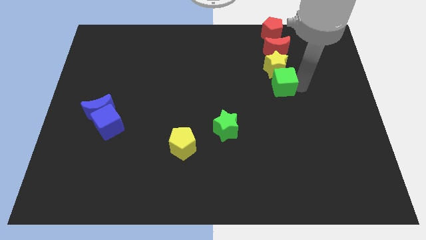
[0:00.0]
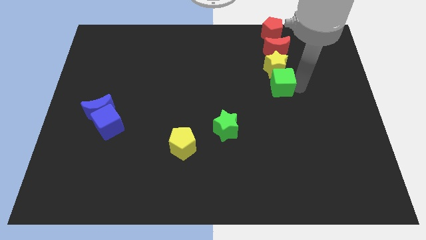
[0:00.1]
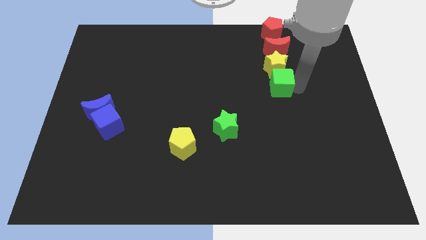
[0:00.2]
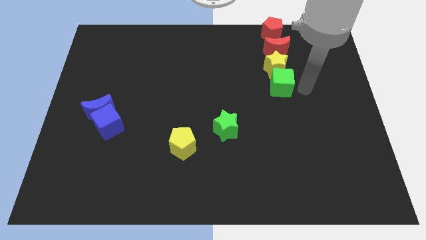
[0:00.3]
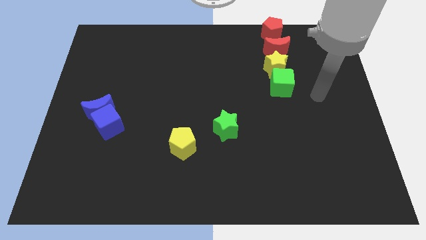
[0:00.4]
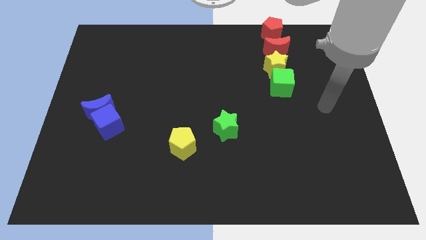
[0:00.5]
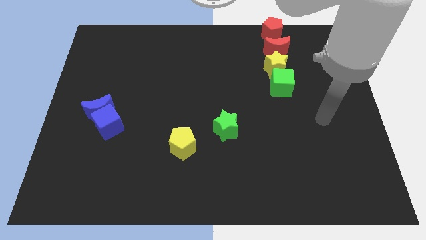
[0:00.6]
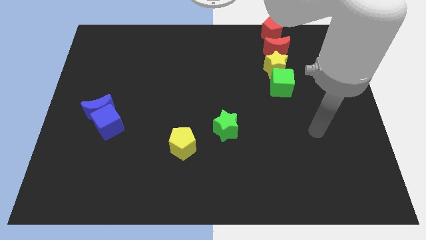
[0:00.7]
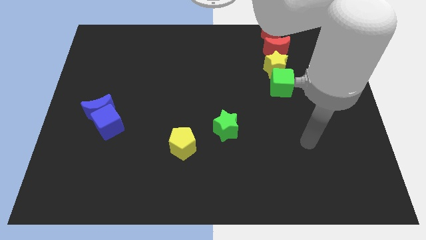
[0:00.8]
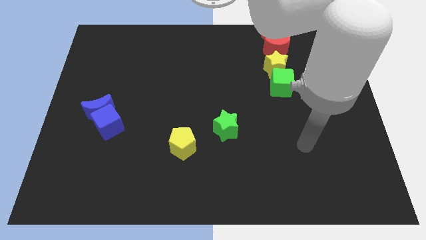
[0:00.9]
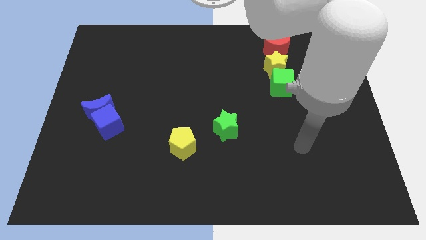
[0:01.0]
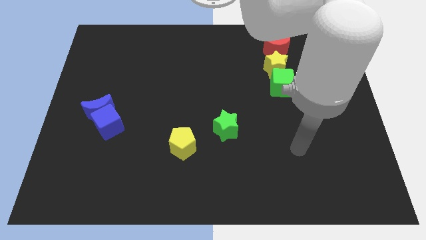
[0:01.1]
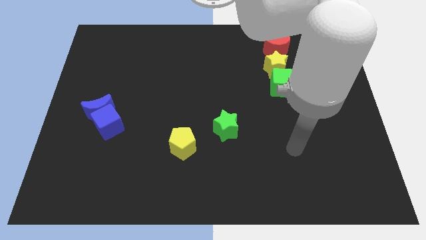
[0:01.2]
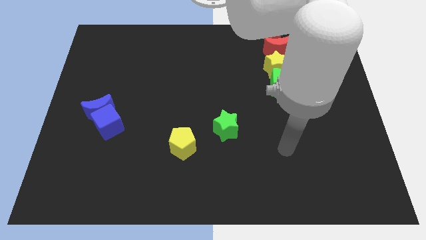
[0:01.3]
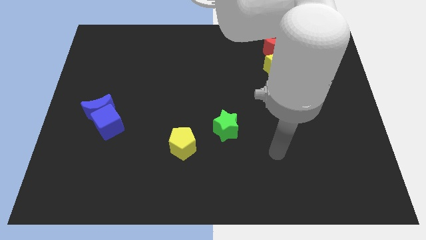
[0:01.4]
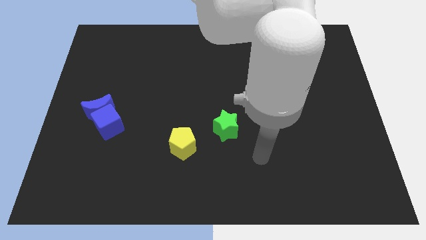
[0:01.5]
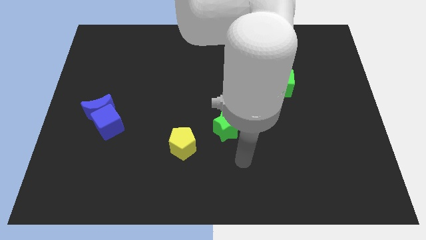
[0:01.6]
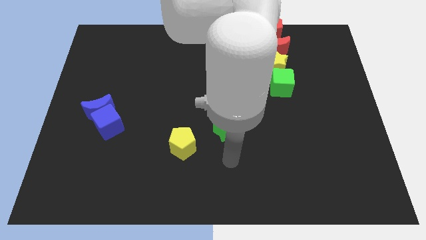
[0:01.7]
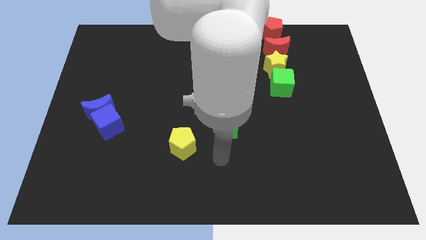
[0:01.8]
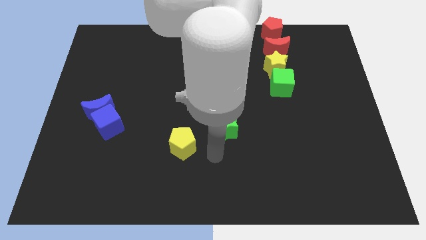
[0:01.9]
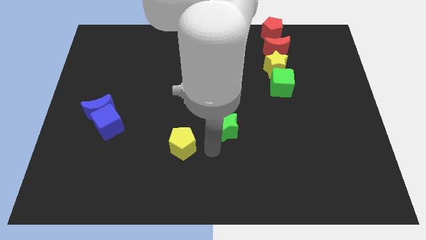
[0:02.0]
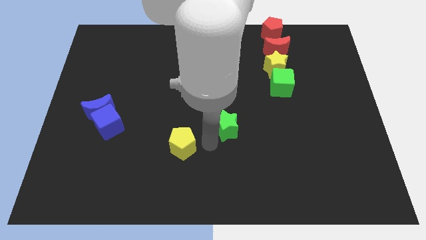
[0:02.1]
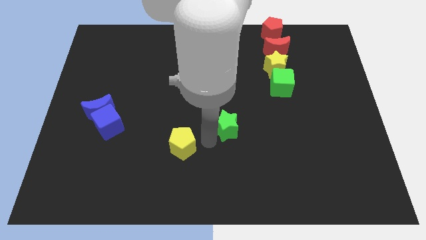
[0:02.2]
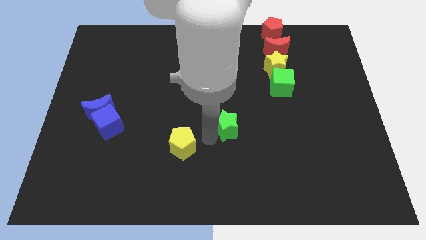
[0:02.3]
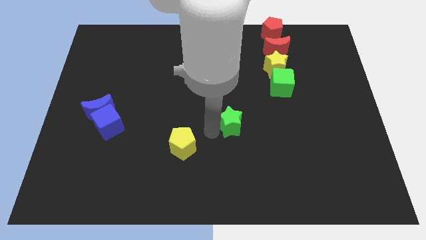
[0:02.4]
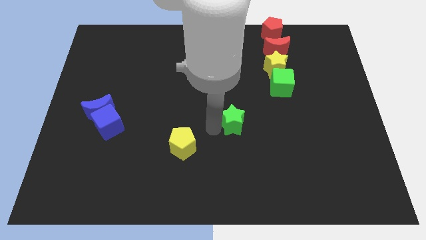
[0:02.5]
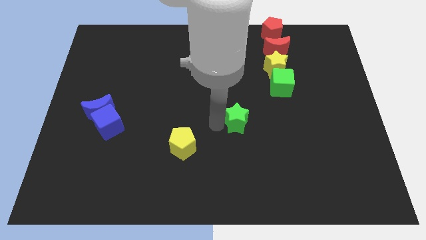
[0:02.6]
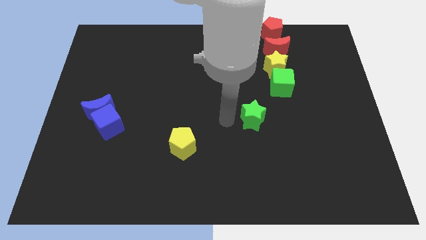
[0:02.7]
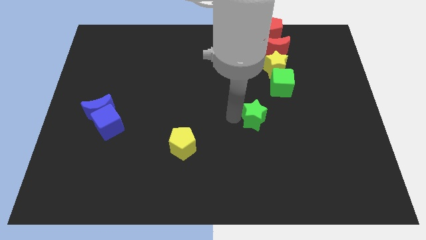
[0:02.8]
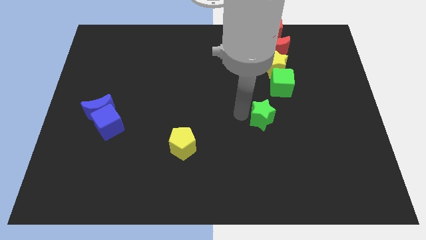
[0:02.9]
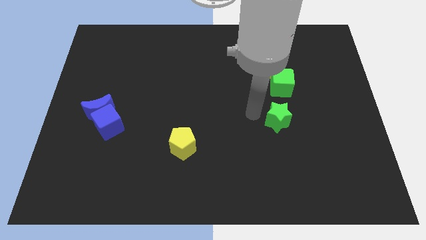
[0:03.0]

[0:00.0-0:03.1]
move your arm away from green cube

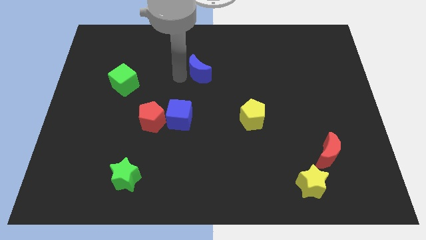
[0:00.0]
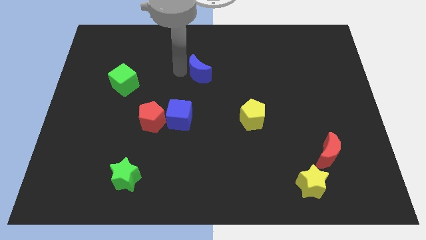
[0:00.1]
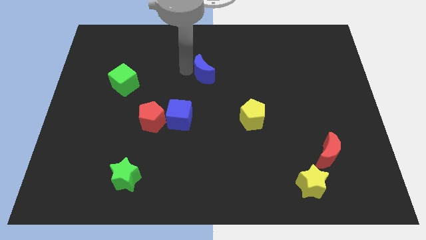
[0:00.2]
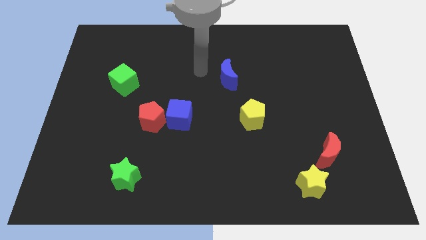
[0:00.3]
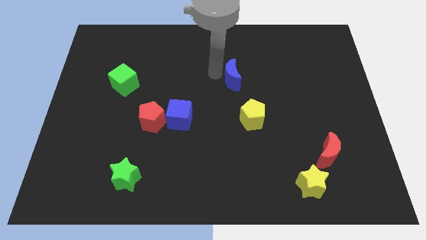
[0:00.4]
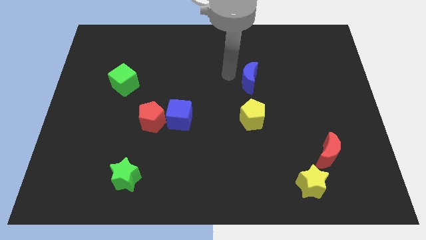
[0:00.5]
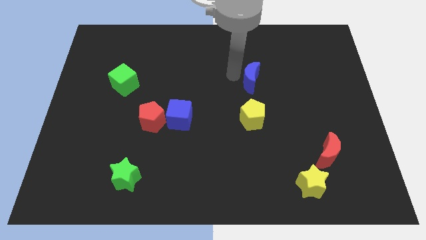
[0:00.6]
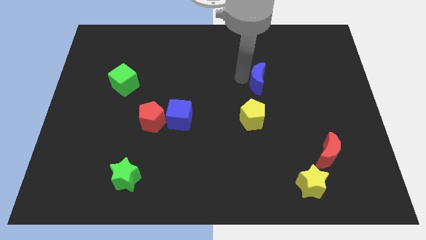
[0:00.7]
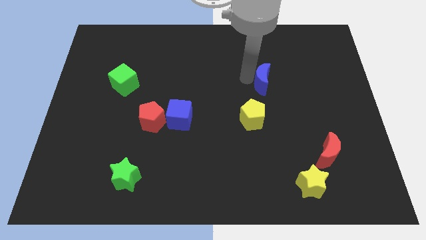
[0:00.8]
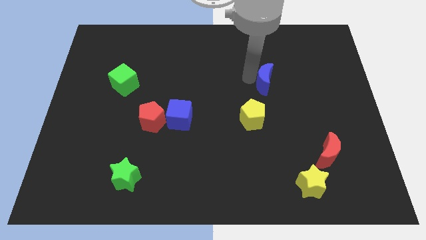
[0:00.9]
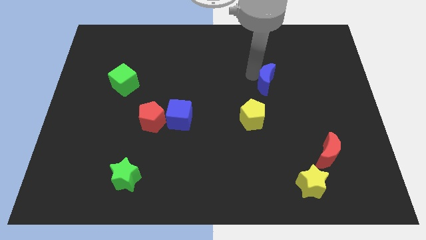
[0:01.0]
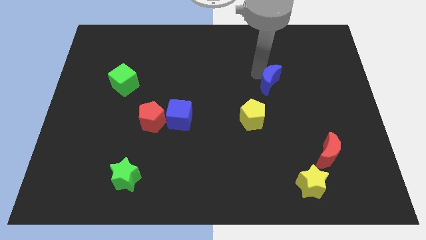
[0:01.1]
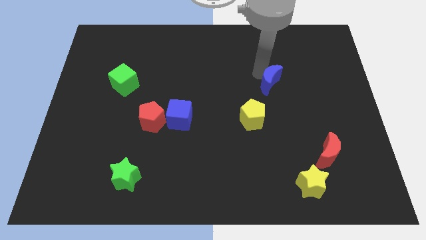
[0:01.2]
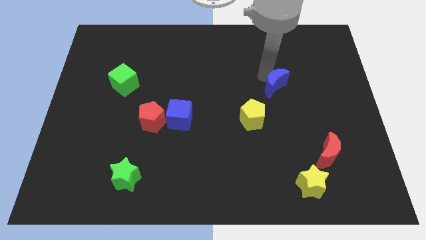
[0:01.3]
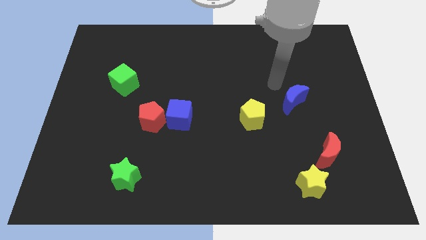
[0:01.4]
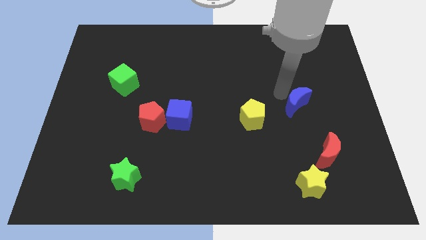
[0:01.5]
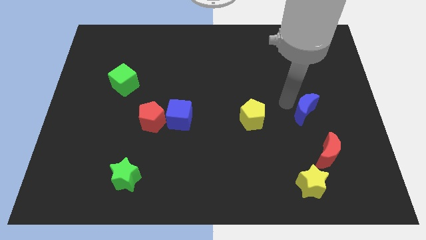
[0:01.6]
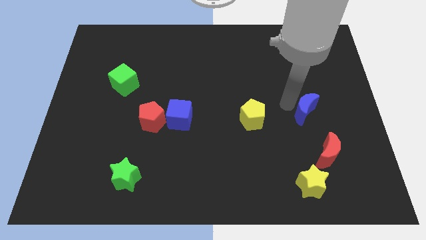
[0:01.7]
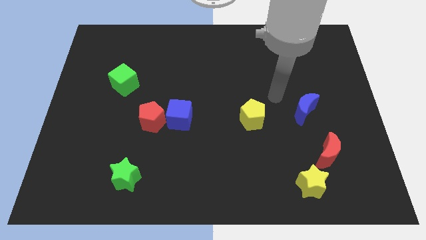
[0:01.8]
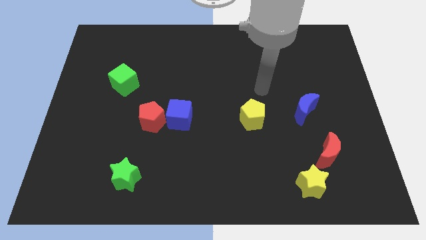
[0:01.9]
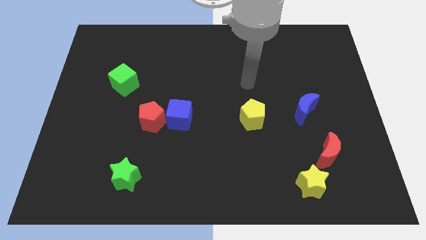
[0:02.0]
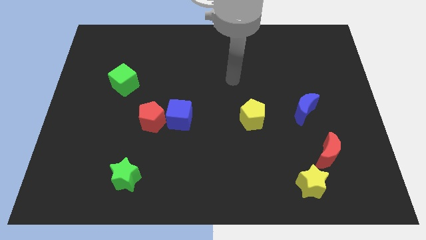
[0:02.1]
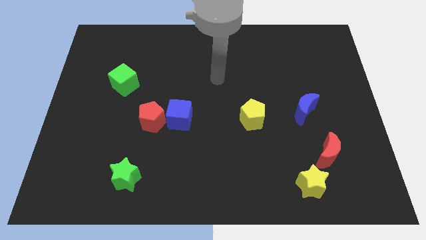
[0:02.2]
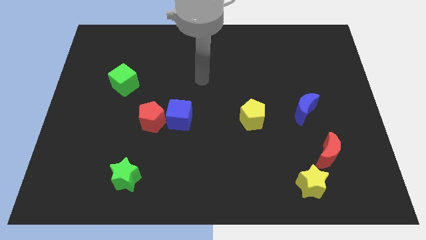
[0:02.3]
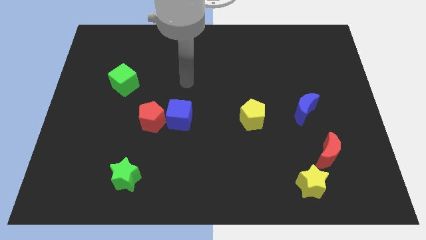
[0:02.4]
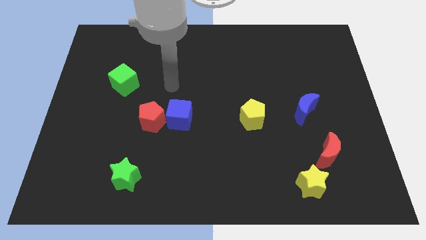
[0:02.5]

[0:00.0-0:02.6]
drag the blue moon to the center right

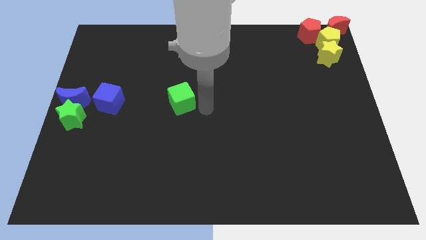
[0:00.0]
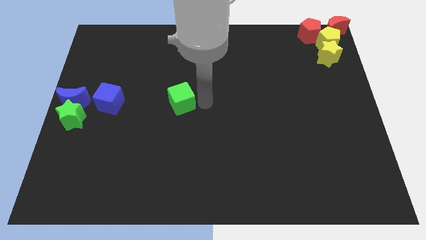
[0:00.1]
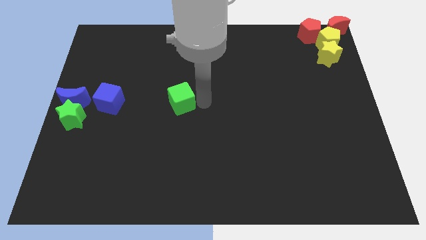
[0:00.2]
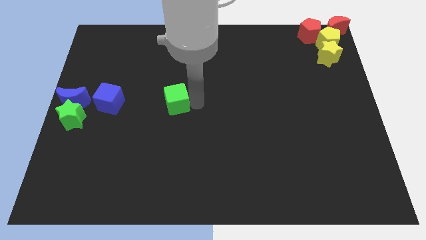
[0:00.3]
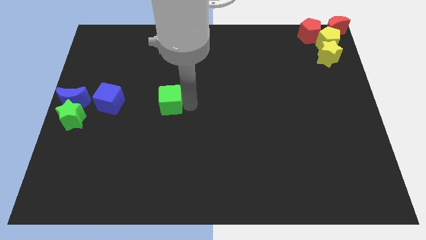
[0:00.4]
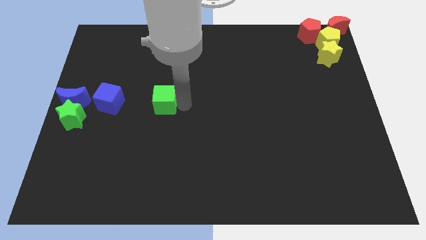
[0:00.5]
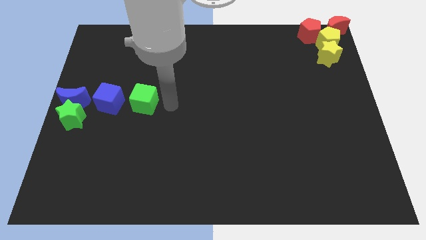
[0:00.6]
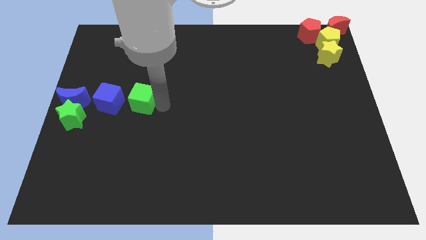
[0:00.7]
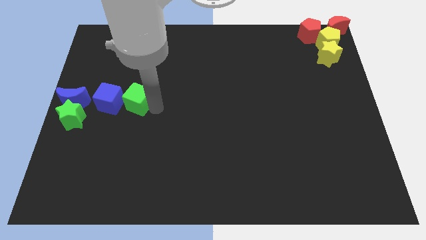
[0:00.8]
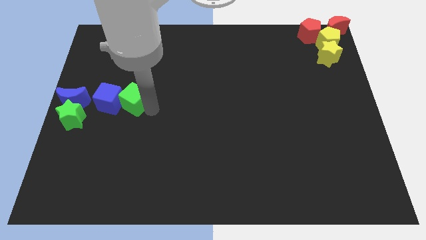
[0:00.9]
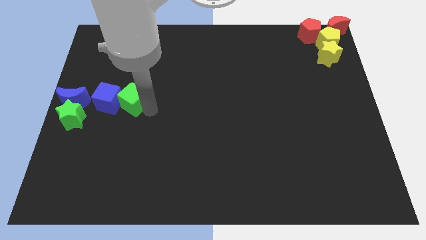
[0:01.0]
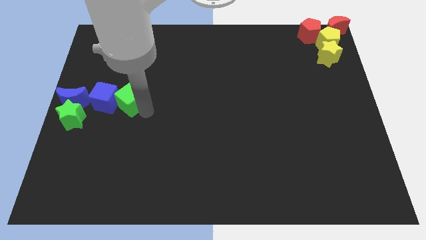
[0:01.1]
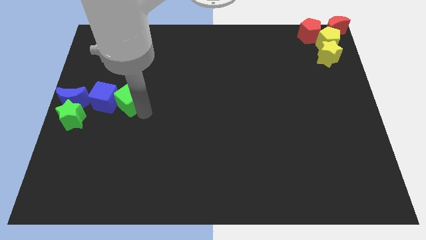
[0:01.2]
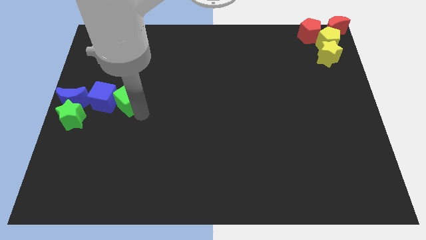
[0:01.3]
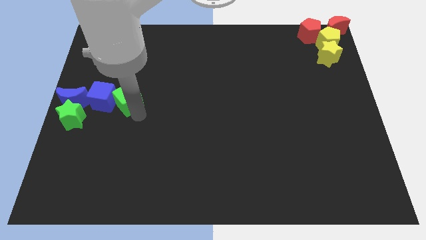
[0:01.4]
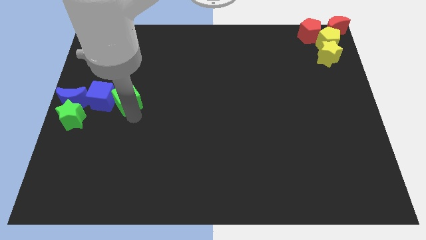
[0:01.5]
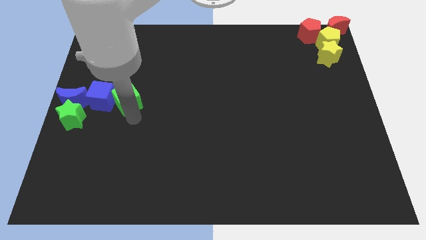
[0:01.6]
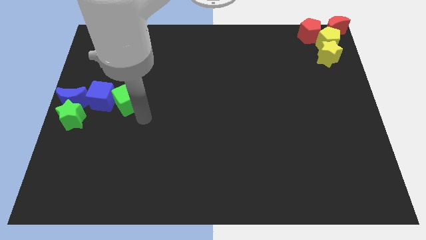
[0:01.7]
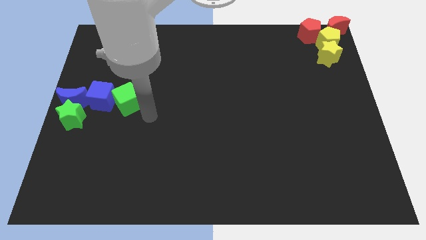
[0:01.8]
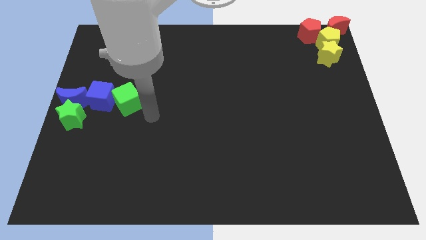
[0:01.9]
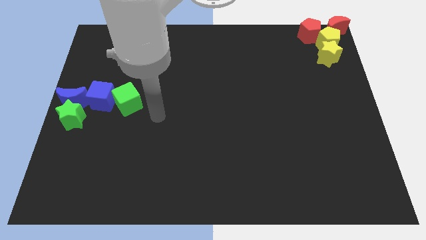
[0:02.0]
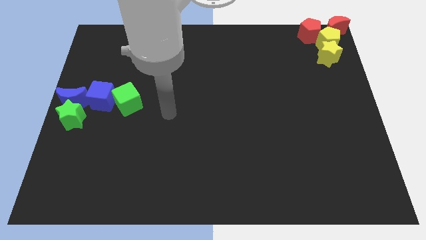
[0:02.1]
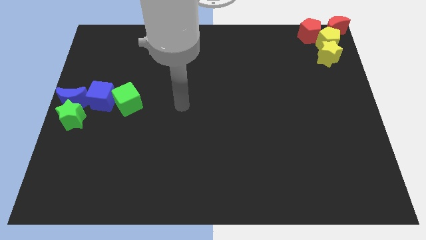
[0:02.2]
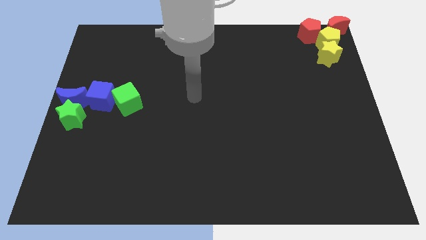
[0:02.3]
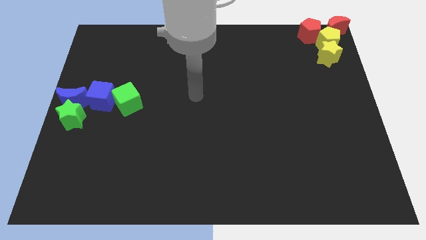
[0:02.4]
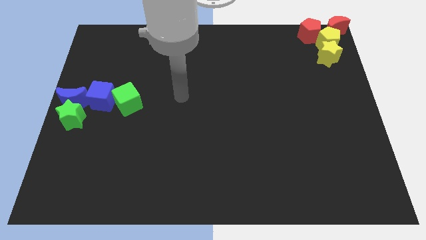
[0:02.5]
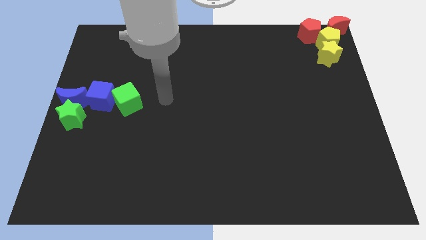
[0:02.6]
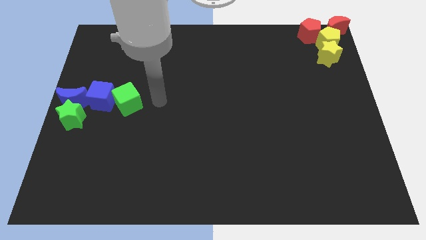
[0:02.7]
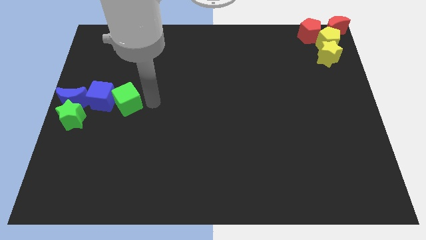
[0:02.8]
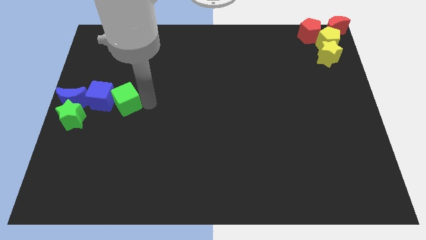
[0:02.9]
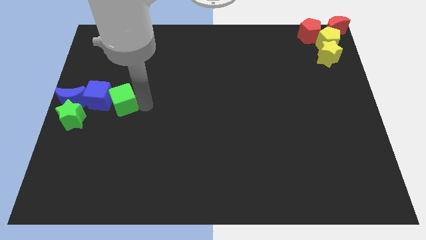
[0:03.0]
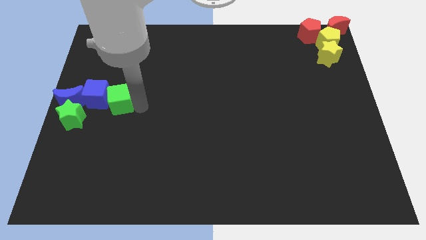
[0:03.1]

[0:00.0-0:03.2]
push the green cube into the blue cube
